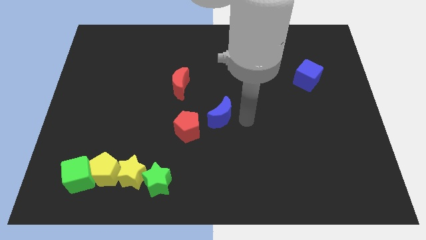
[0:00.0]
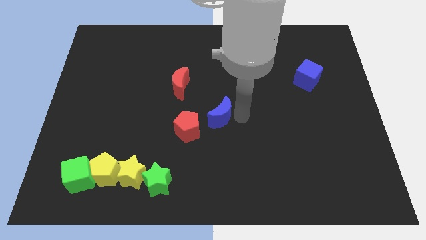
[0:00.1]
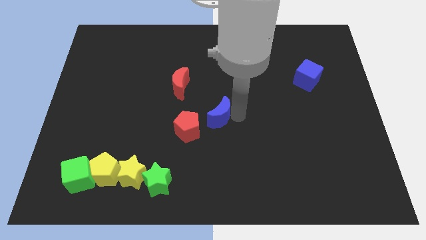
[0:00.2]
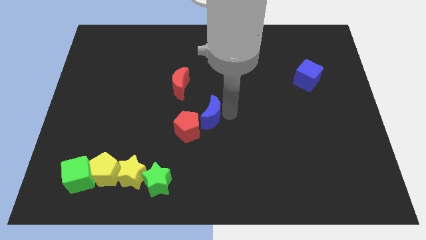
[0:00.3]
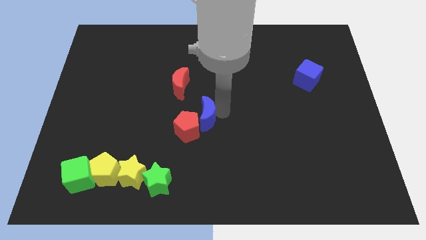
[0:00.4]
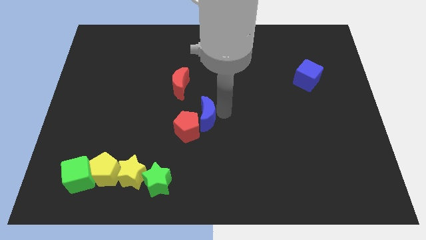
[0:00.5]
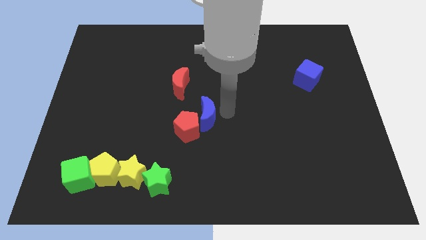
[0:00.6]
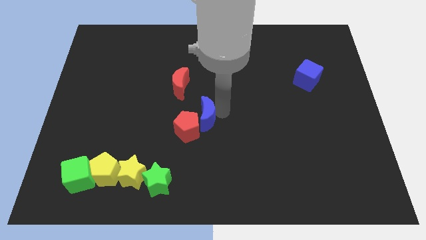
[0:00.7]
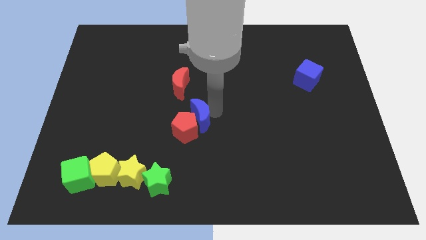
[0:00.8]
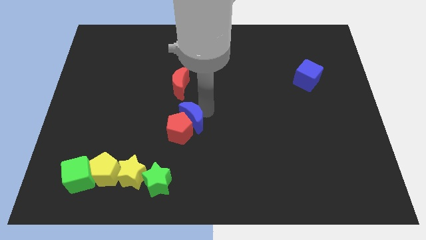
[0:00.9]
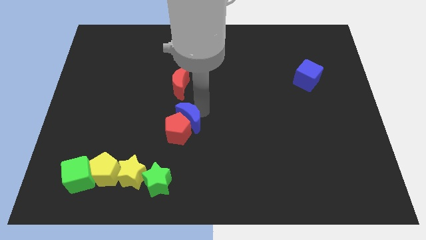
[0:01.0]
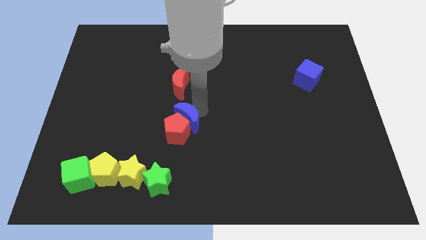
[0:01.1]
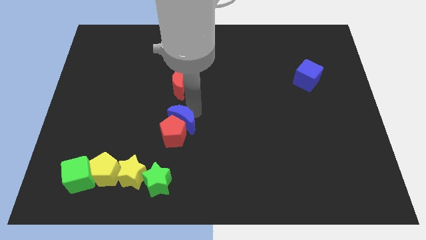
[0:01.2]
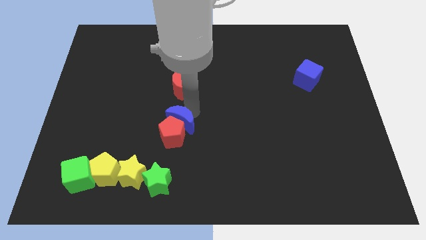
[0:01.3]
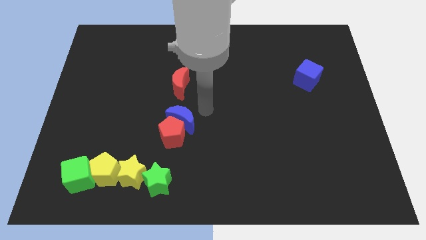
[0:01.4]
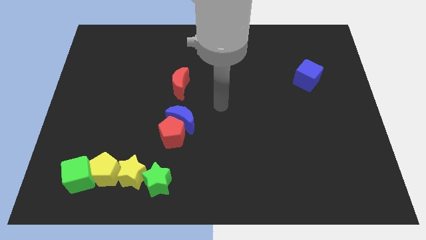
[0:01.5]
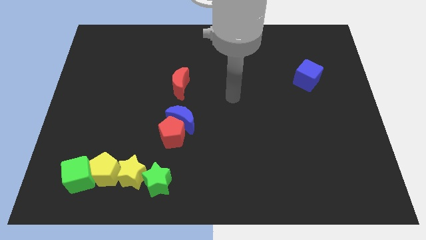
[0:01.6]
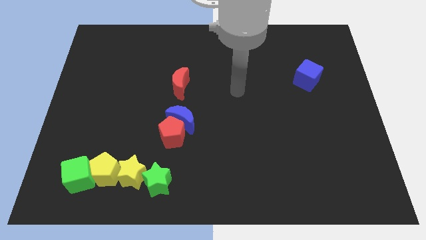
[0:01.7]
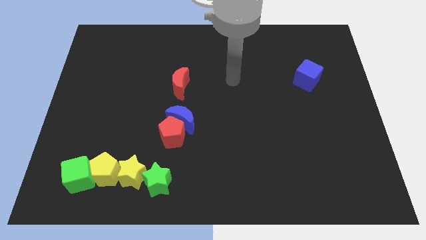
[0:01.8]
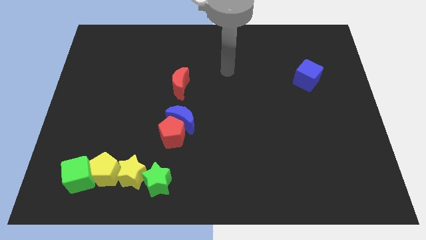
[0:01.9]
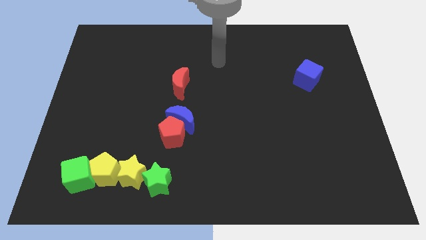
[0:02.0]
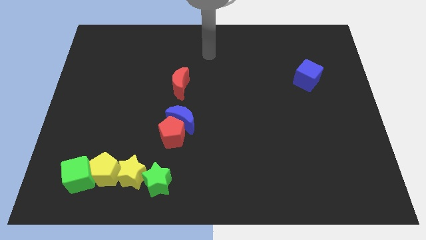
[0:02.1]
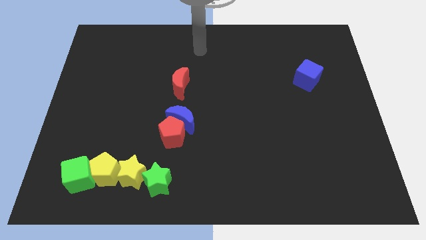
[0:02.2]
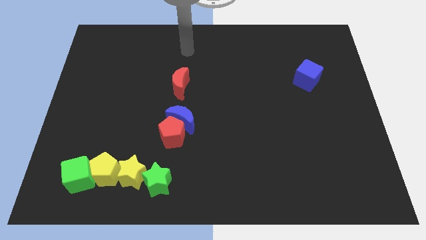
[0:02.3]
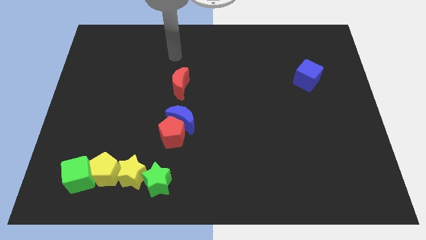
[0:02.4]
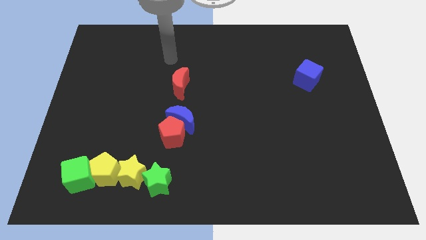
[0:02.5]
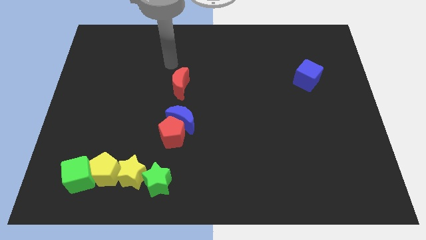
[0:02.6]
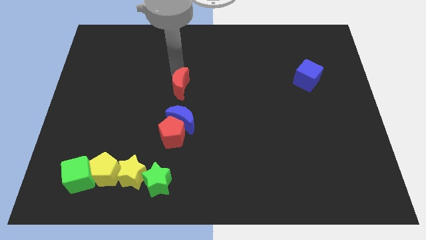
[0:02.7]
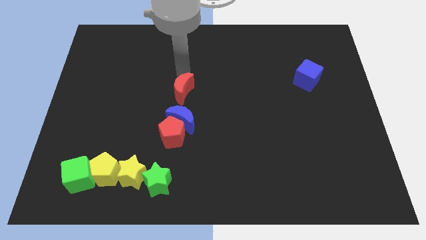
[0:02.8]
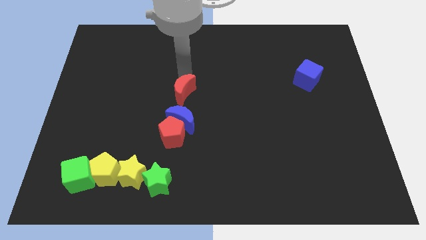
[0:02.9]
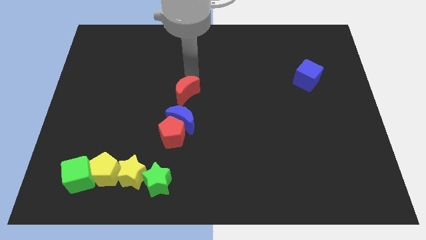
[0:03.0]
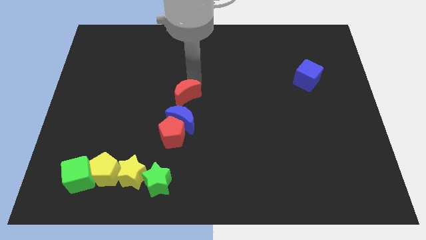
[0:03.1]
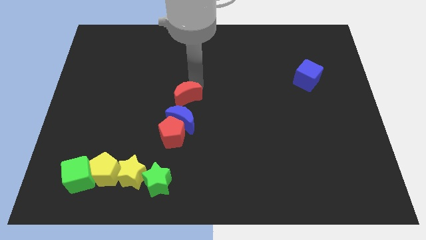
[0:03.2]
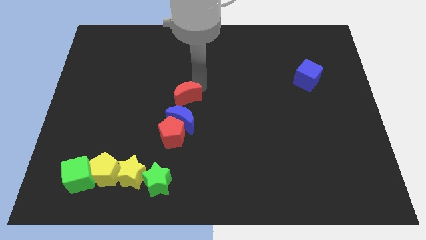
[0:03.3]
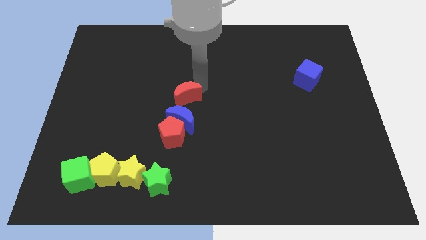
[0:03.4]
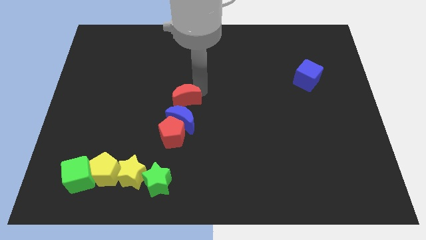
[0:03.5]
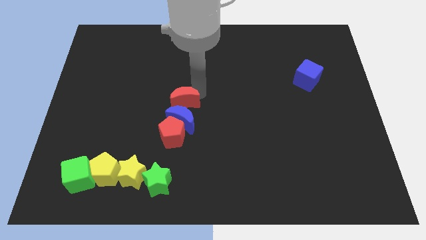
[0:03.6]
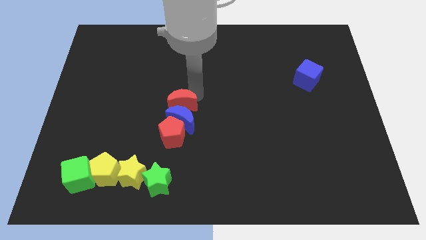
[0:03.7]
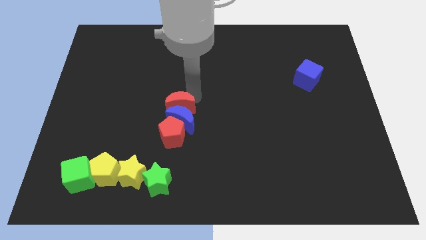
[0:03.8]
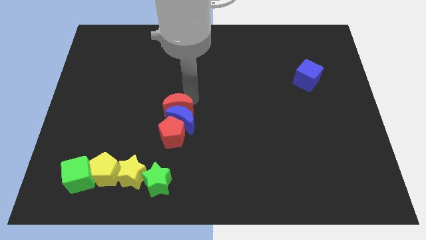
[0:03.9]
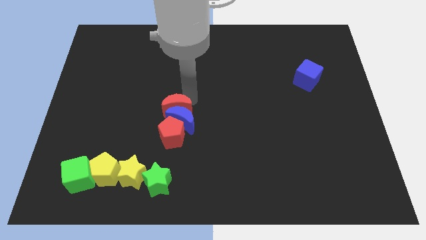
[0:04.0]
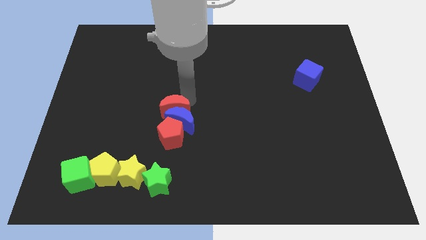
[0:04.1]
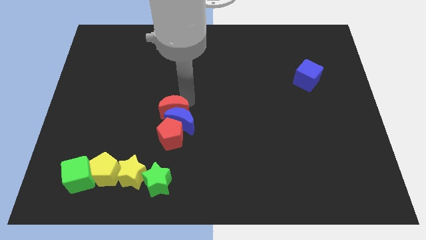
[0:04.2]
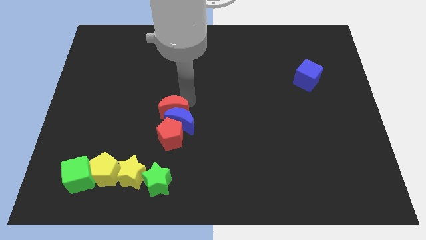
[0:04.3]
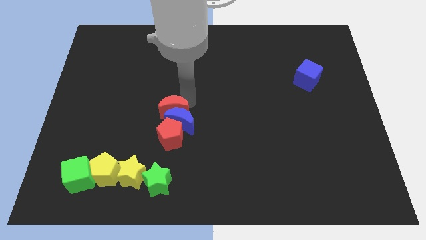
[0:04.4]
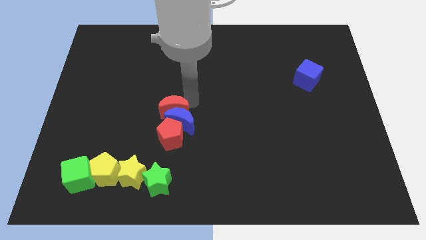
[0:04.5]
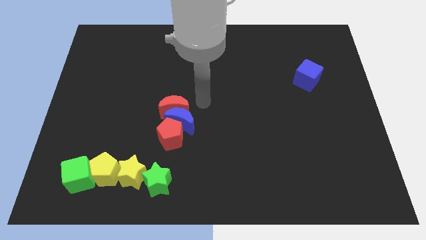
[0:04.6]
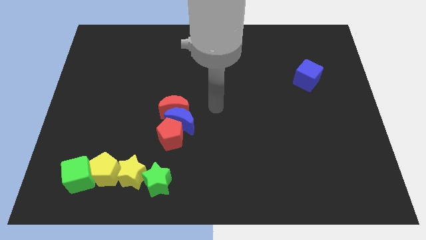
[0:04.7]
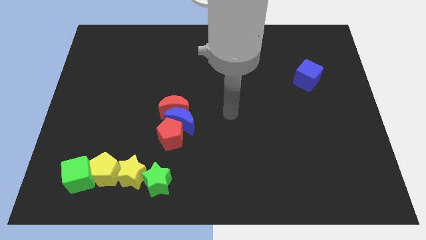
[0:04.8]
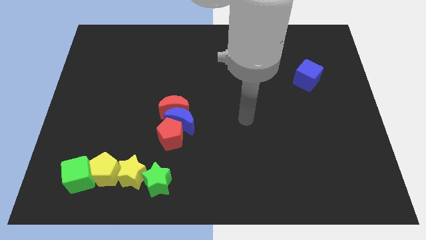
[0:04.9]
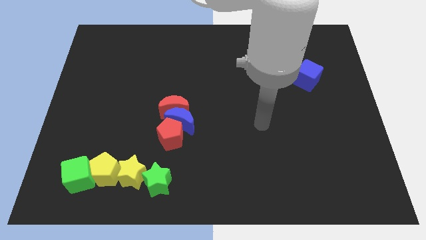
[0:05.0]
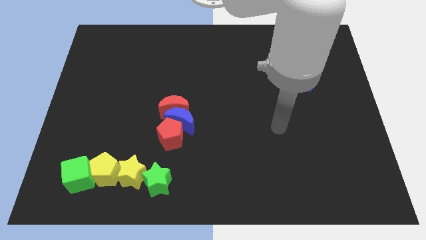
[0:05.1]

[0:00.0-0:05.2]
move the red moon and blue moon into the red pentagon

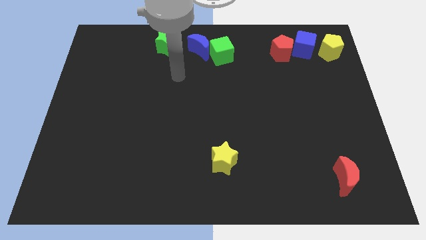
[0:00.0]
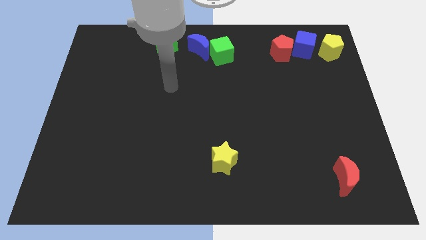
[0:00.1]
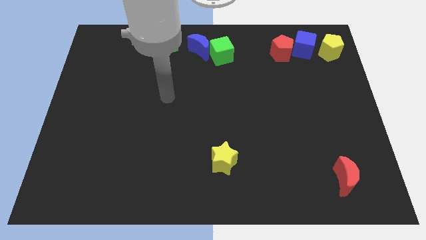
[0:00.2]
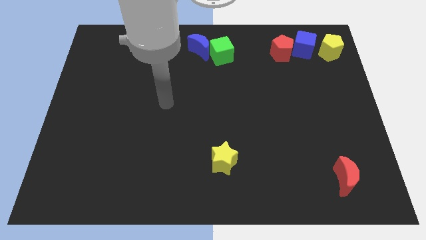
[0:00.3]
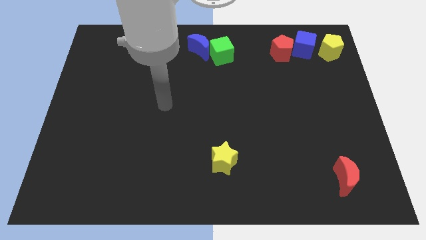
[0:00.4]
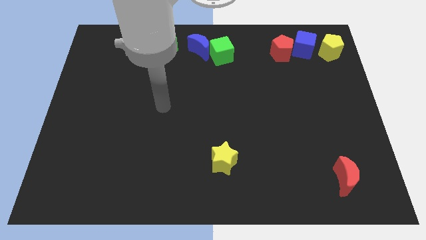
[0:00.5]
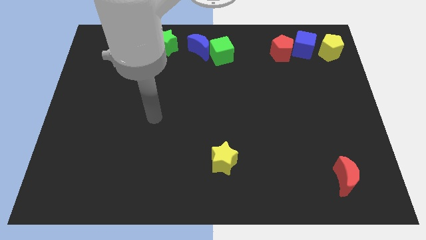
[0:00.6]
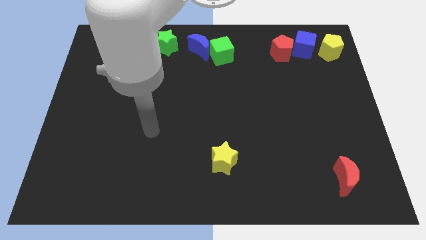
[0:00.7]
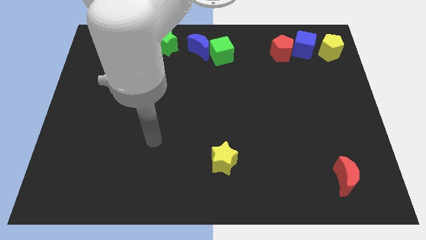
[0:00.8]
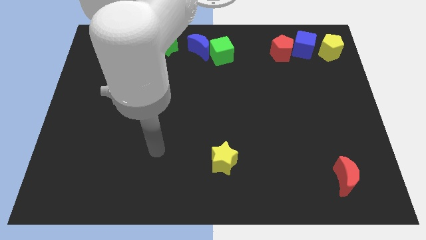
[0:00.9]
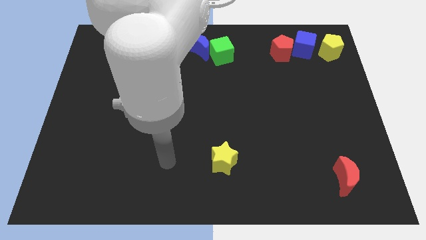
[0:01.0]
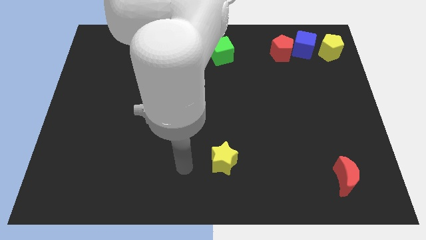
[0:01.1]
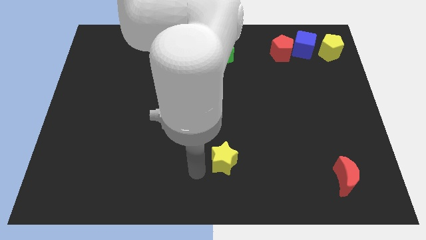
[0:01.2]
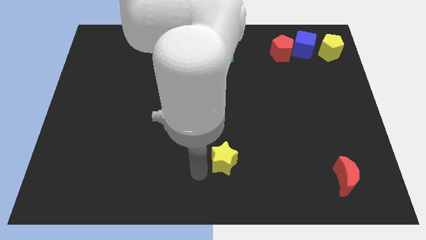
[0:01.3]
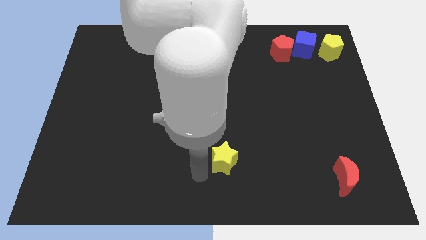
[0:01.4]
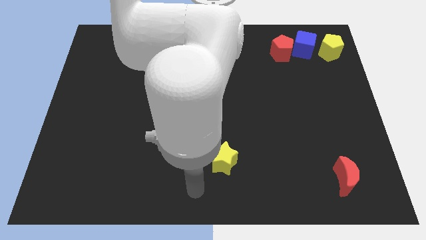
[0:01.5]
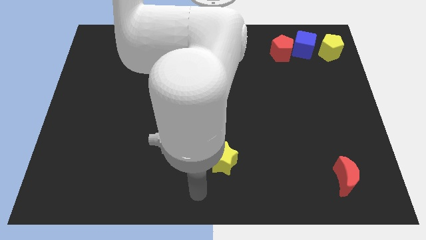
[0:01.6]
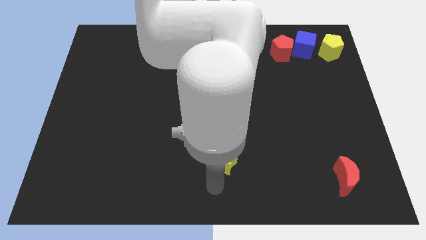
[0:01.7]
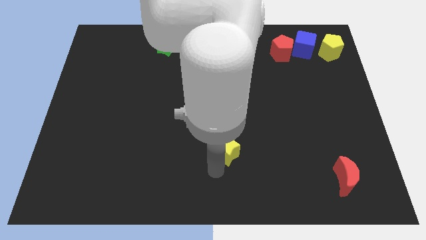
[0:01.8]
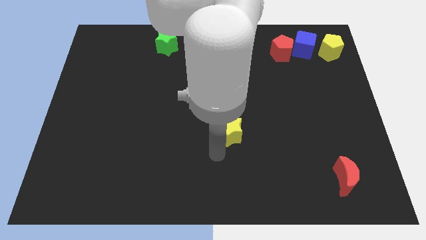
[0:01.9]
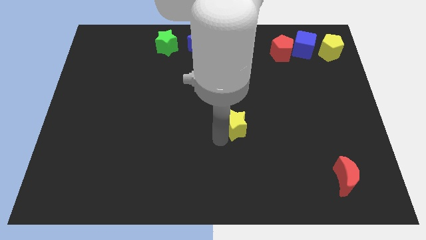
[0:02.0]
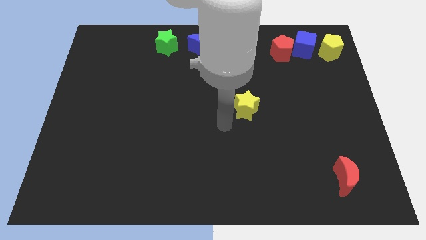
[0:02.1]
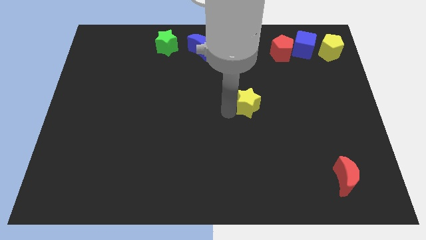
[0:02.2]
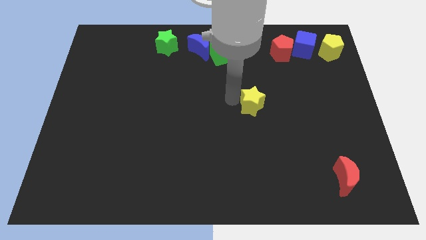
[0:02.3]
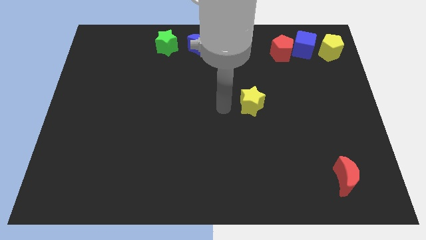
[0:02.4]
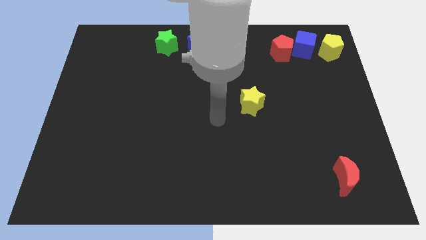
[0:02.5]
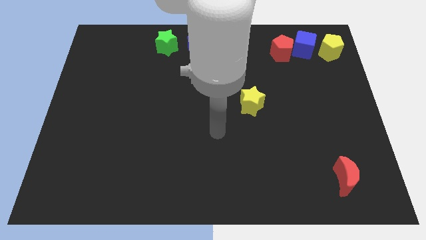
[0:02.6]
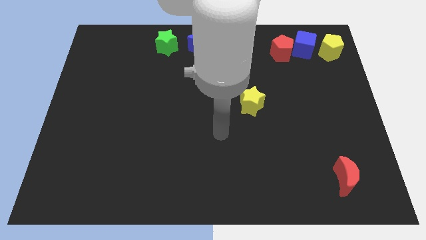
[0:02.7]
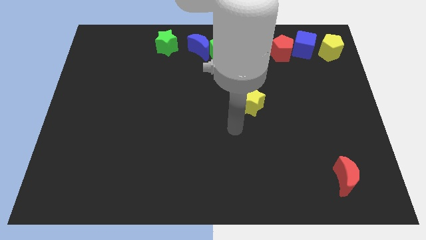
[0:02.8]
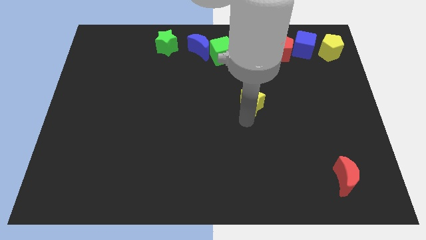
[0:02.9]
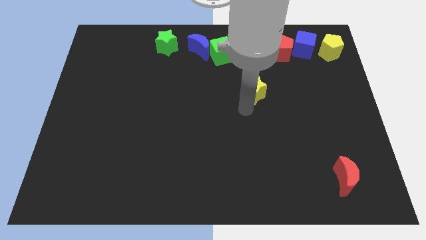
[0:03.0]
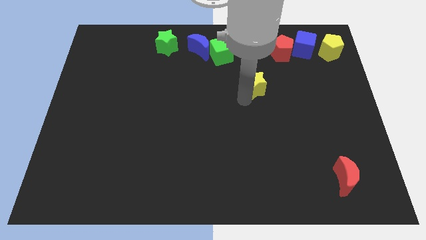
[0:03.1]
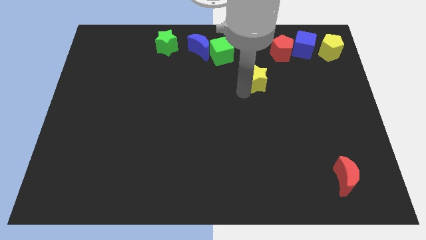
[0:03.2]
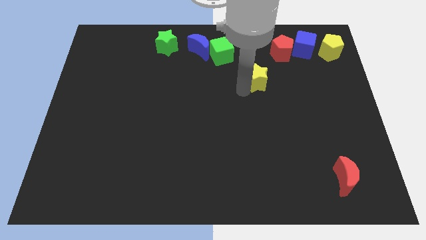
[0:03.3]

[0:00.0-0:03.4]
push the yellow star to the top of the board

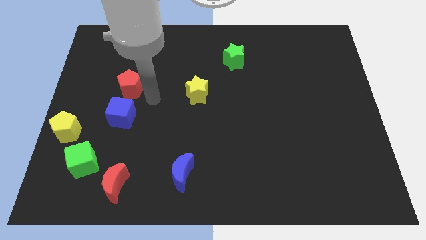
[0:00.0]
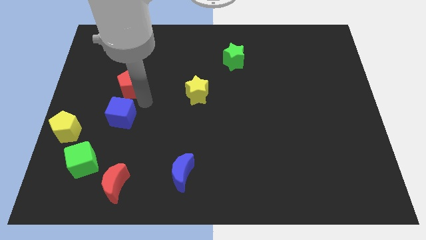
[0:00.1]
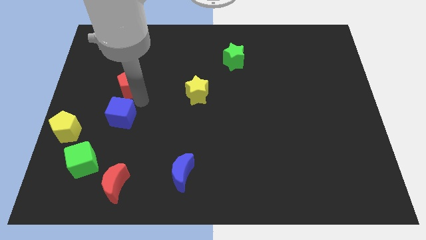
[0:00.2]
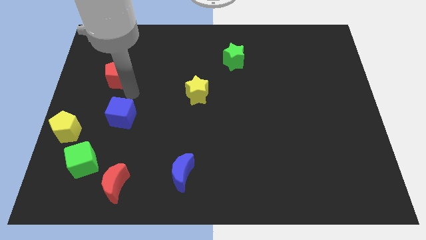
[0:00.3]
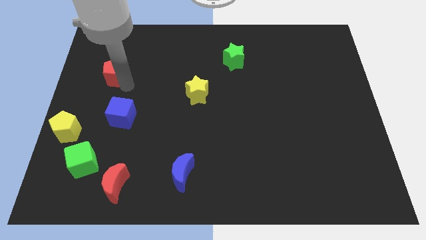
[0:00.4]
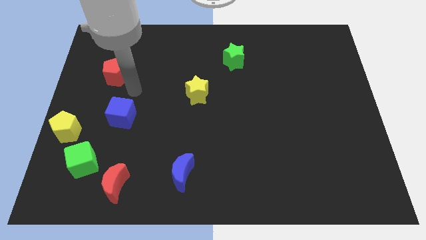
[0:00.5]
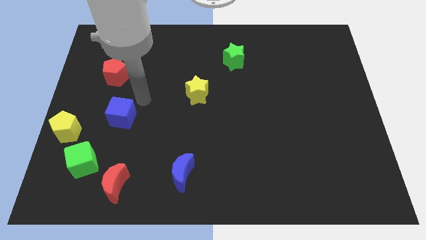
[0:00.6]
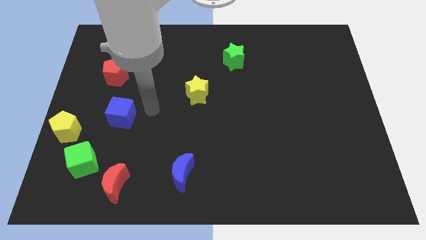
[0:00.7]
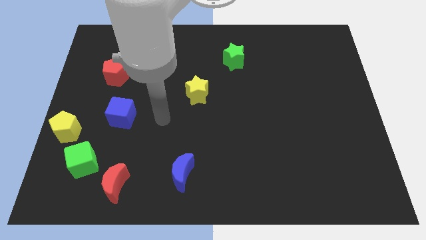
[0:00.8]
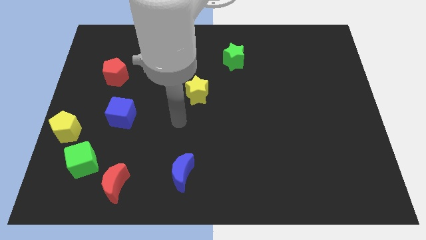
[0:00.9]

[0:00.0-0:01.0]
push the red pentagon slightly to the top
